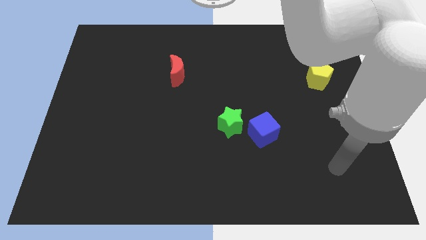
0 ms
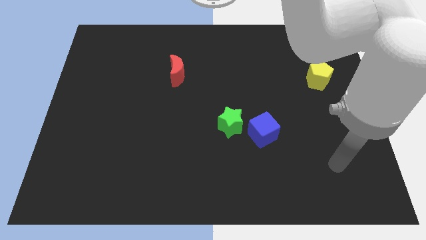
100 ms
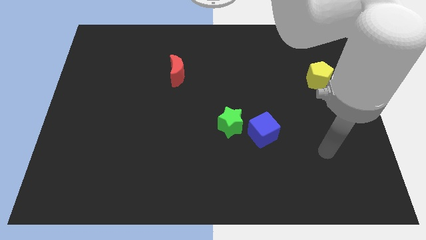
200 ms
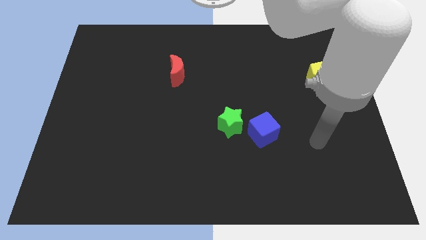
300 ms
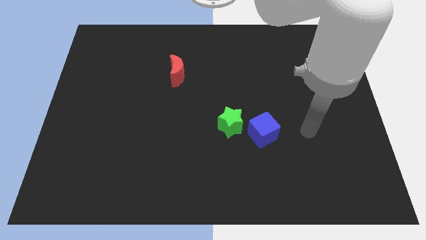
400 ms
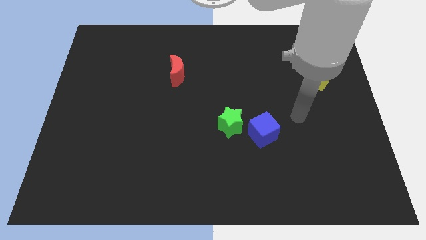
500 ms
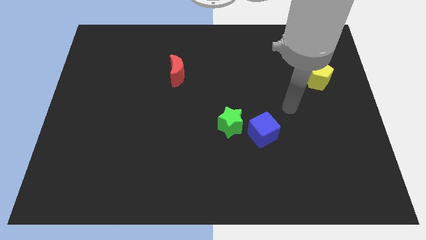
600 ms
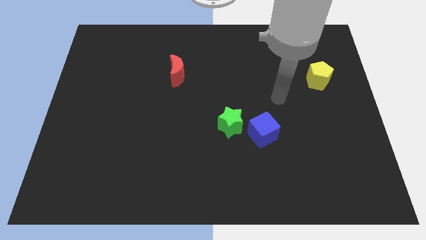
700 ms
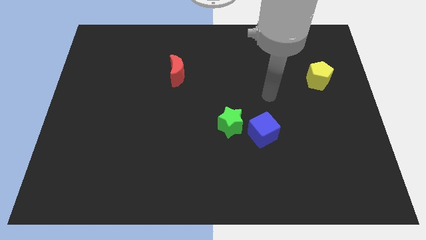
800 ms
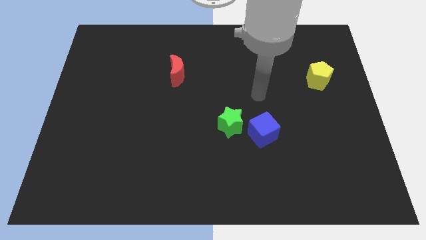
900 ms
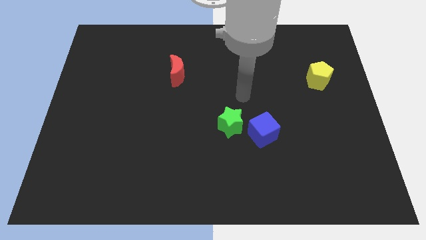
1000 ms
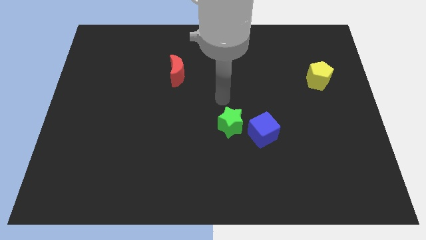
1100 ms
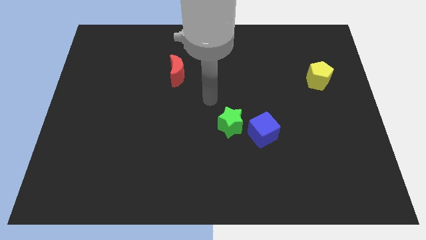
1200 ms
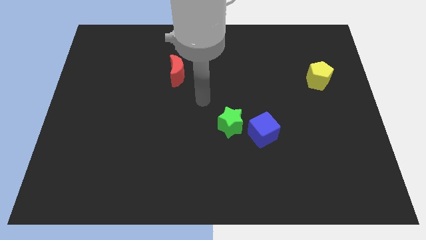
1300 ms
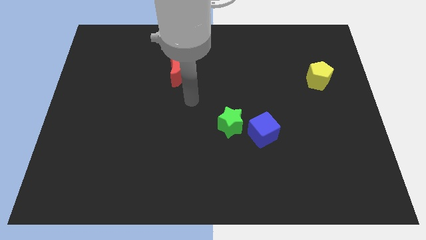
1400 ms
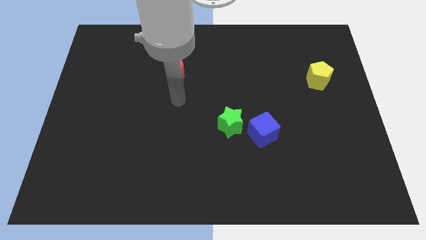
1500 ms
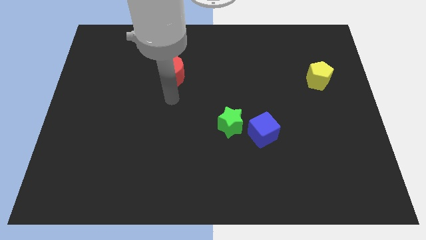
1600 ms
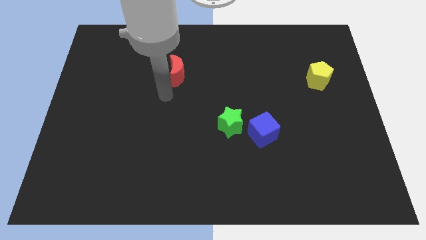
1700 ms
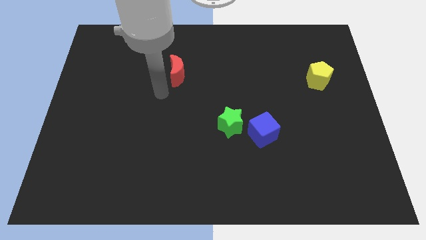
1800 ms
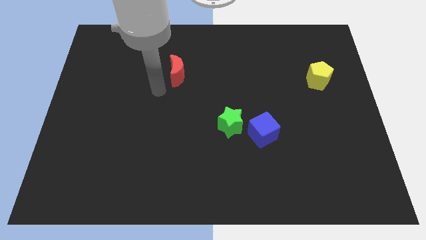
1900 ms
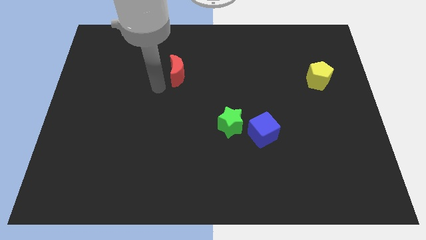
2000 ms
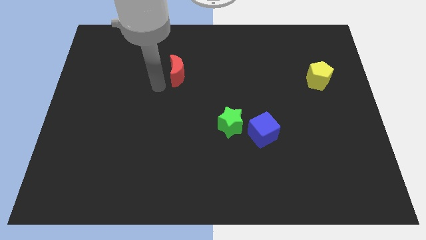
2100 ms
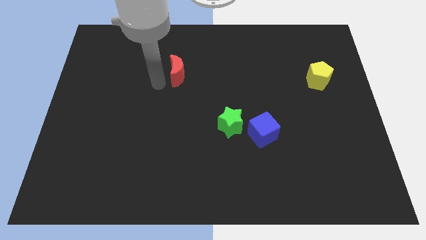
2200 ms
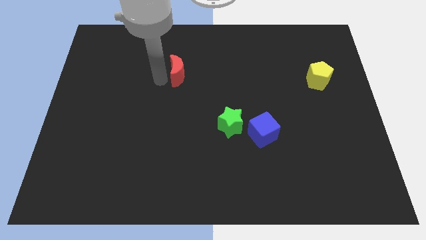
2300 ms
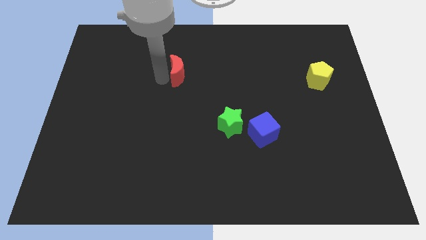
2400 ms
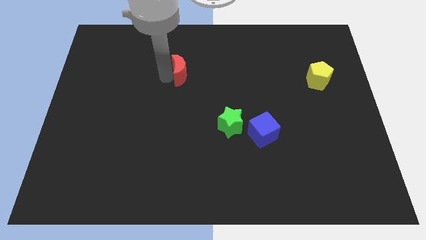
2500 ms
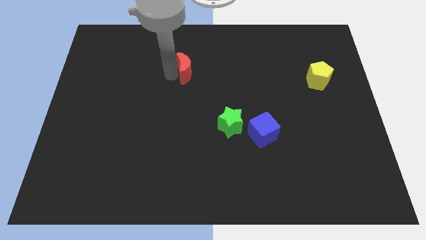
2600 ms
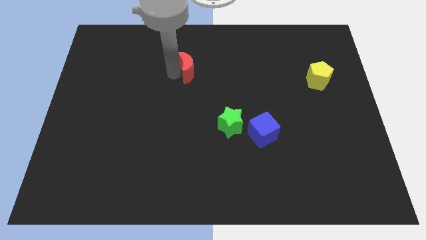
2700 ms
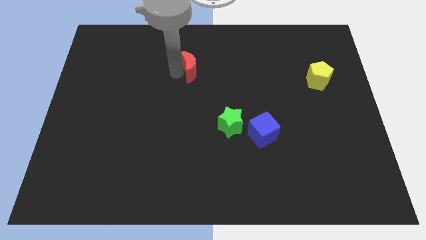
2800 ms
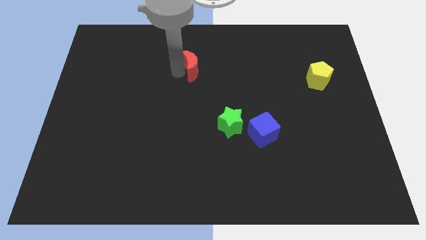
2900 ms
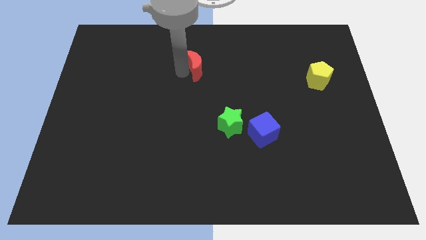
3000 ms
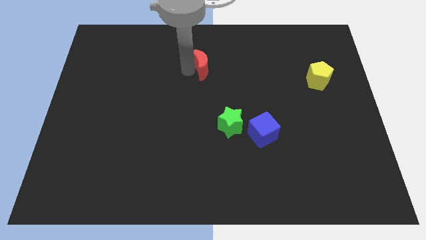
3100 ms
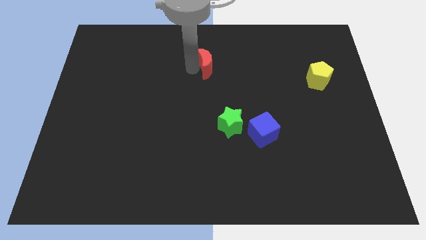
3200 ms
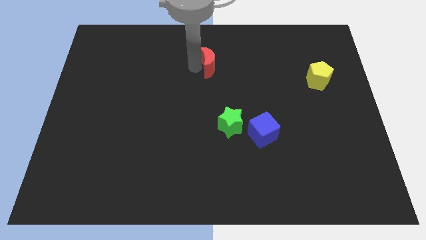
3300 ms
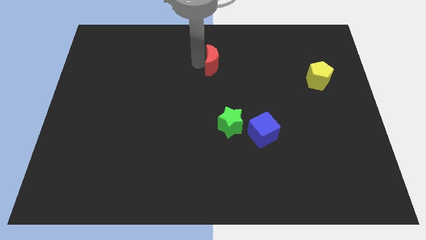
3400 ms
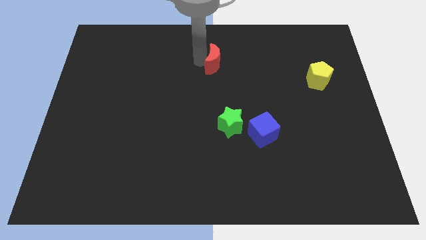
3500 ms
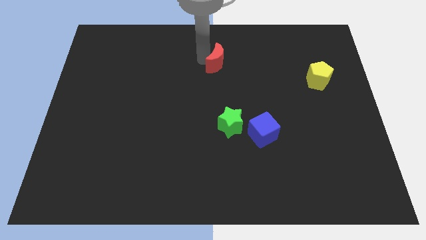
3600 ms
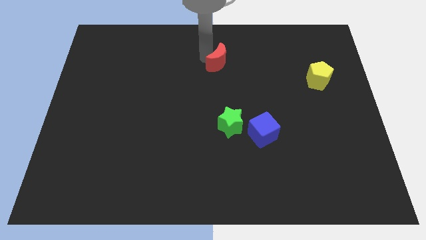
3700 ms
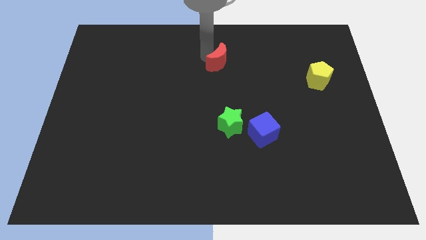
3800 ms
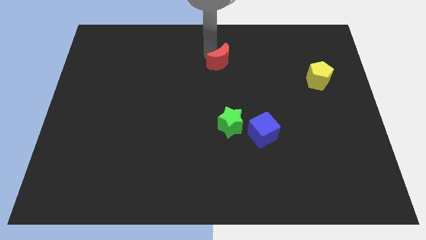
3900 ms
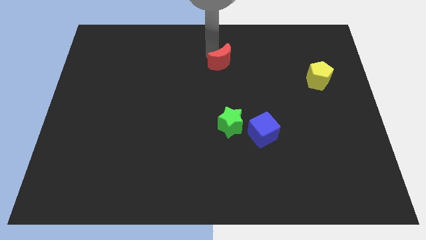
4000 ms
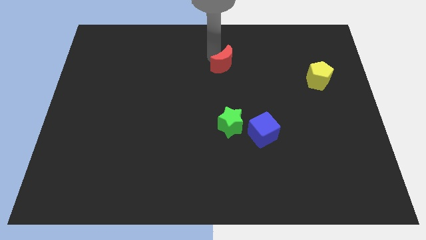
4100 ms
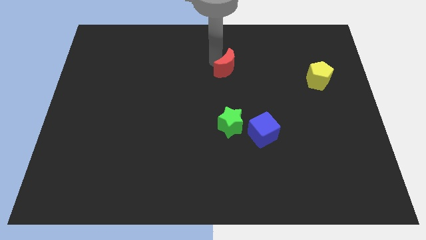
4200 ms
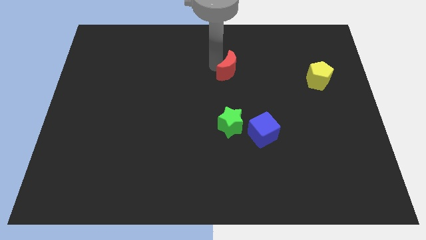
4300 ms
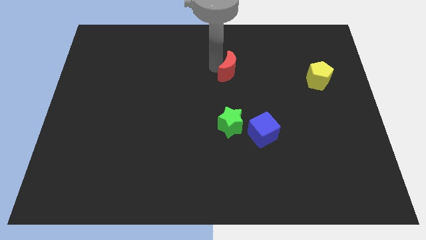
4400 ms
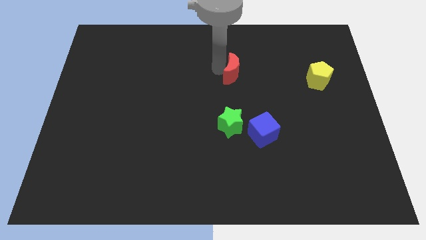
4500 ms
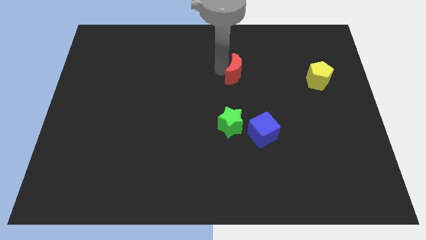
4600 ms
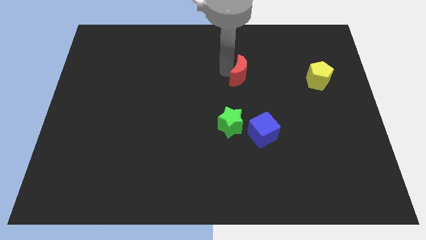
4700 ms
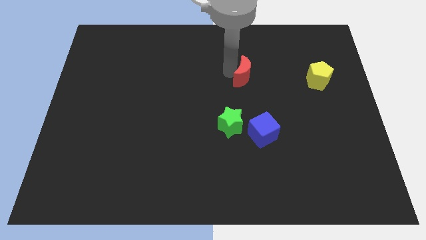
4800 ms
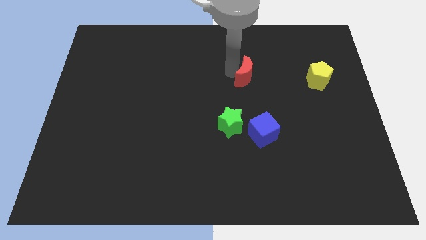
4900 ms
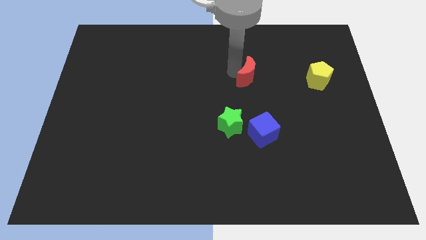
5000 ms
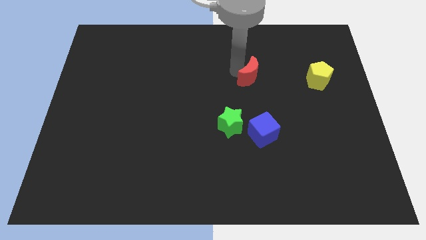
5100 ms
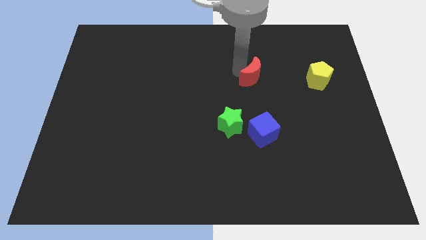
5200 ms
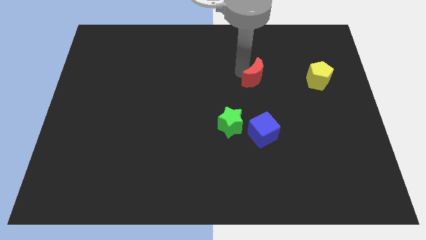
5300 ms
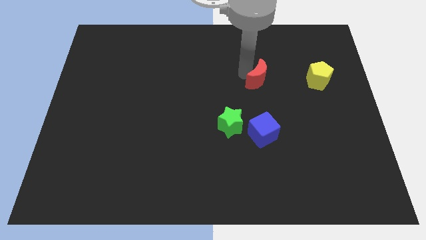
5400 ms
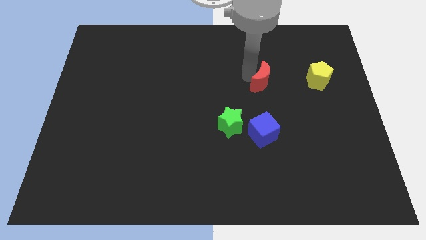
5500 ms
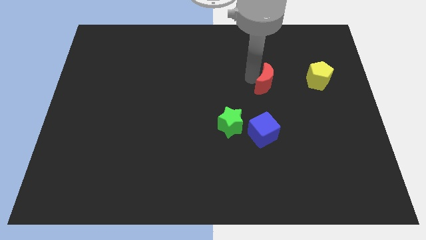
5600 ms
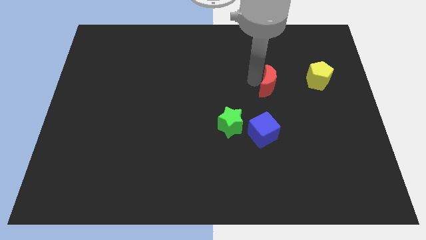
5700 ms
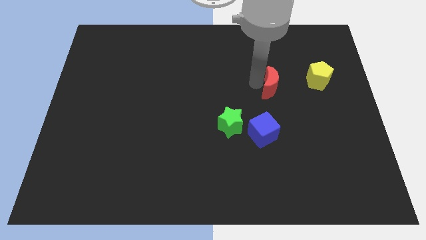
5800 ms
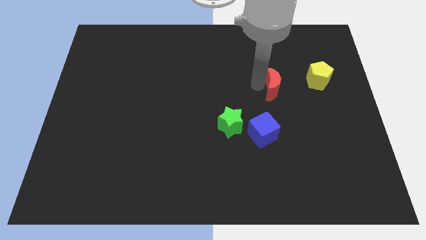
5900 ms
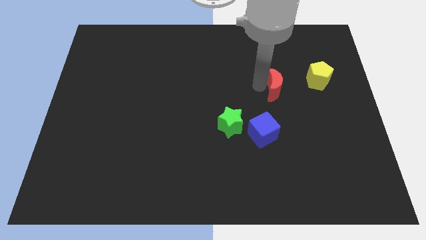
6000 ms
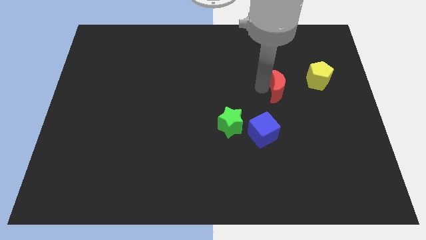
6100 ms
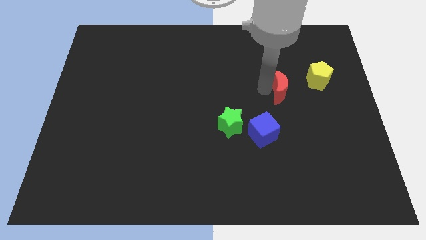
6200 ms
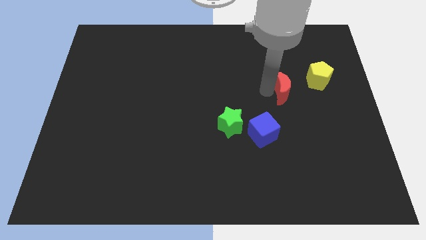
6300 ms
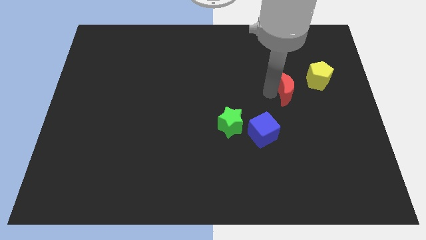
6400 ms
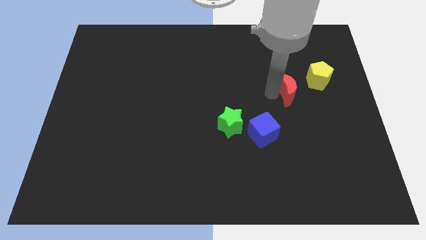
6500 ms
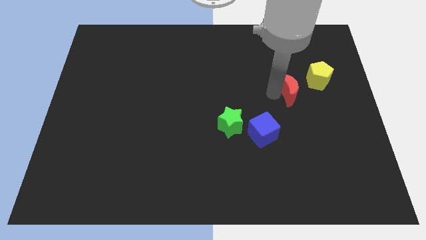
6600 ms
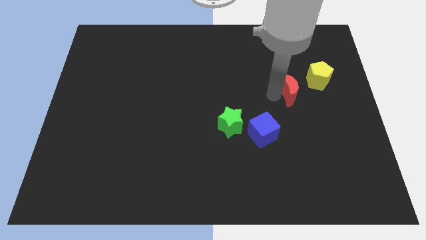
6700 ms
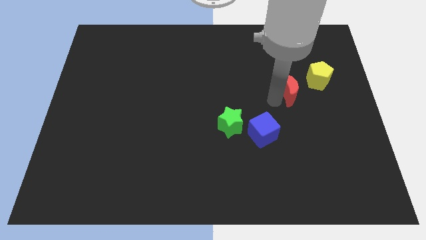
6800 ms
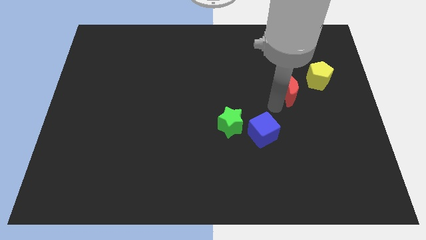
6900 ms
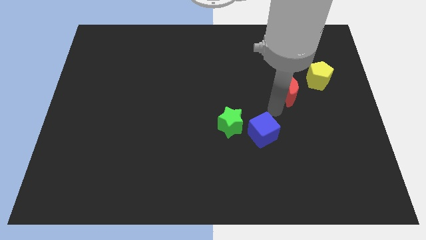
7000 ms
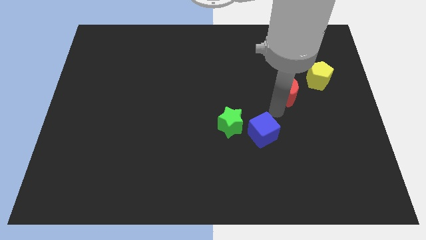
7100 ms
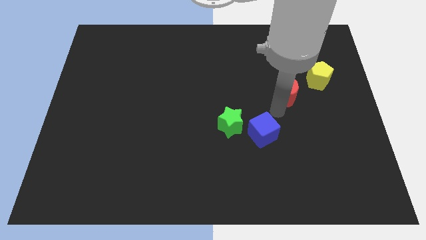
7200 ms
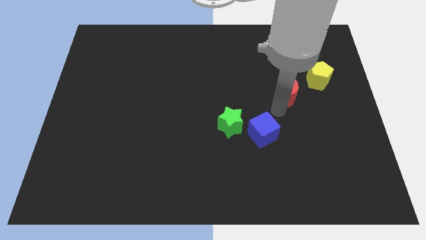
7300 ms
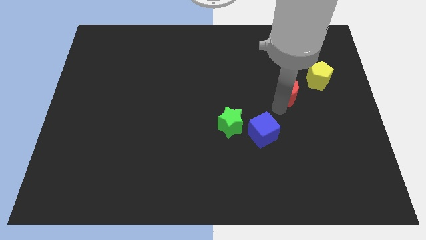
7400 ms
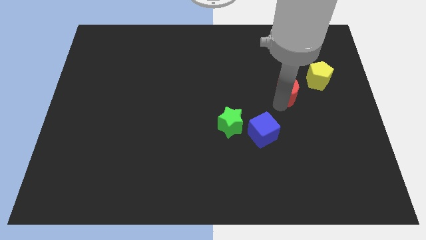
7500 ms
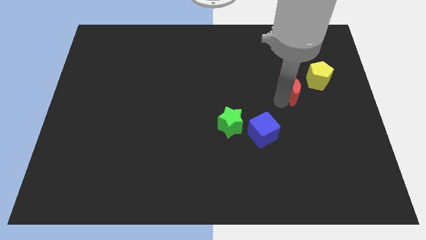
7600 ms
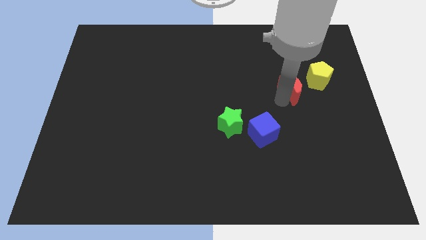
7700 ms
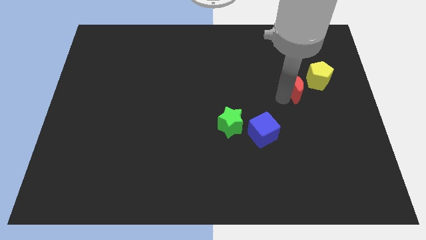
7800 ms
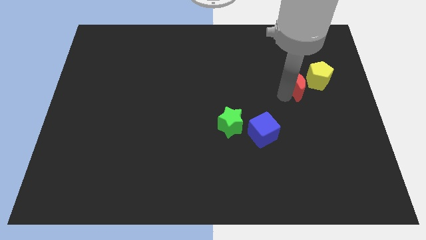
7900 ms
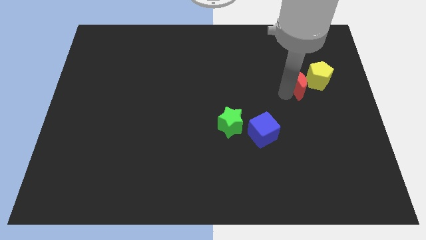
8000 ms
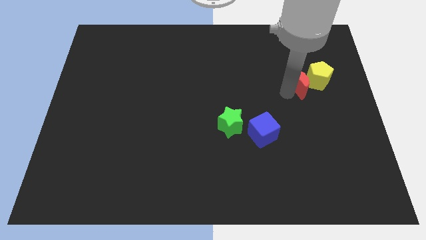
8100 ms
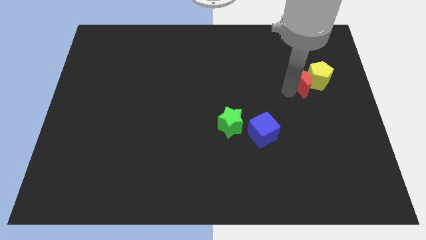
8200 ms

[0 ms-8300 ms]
slide the red moon towards the pentagon

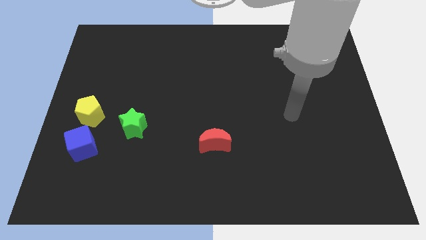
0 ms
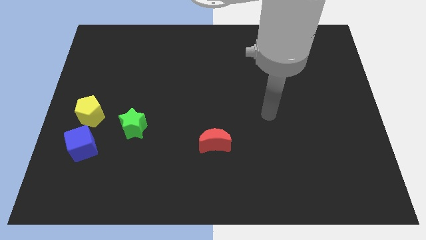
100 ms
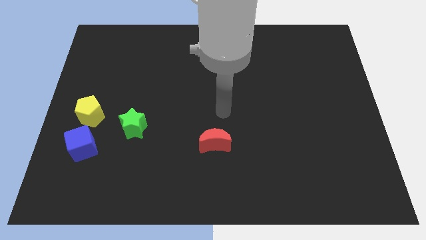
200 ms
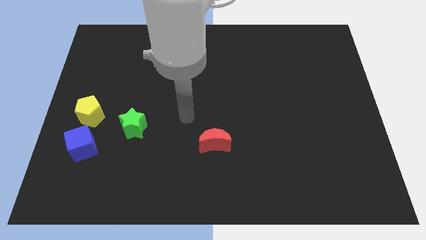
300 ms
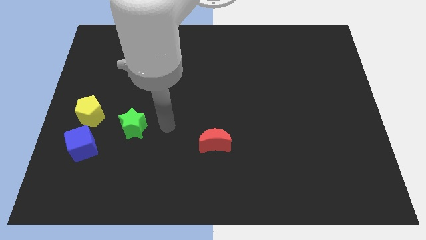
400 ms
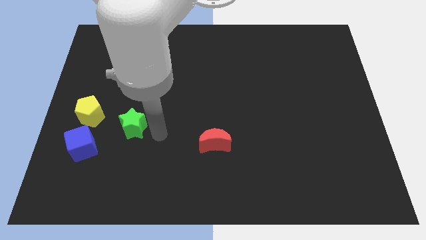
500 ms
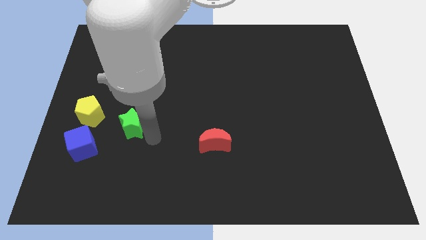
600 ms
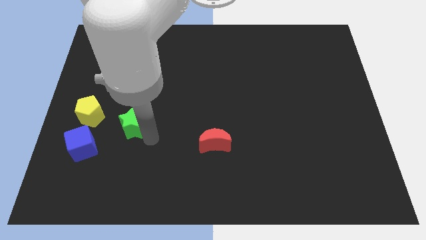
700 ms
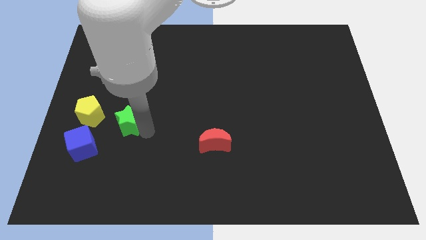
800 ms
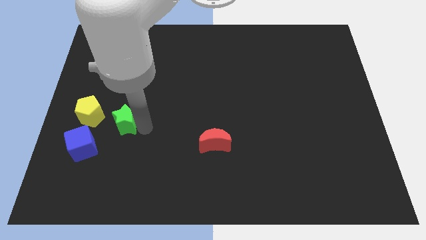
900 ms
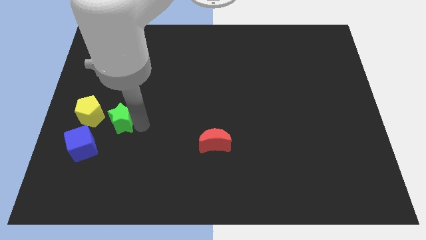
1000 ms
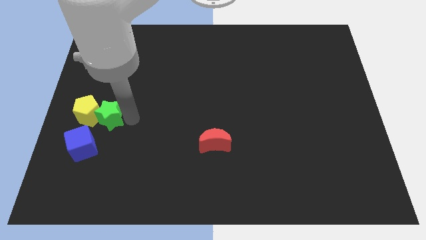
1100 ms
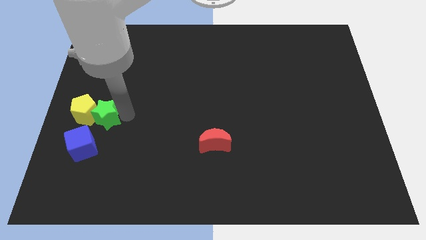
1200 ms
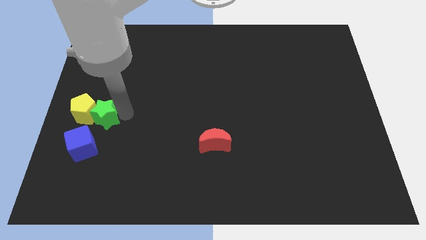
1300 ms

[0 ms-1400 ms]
push the star close to the pentagon
